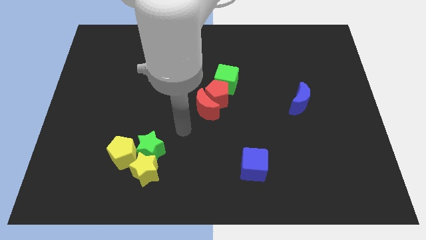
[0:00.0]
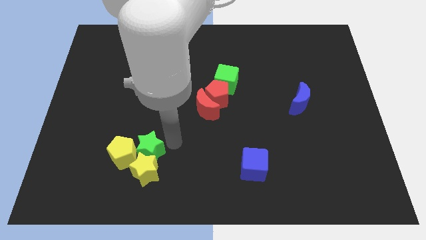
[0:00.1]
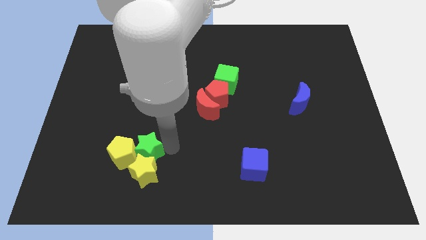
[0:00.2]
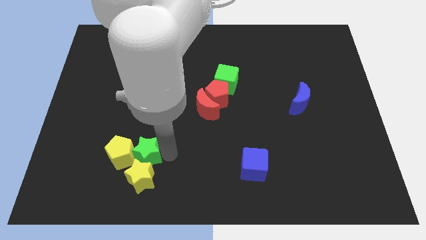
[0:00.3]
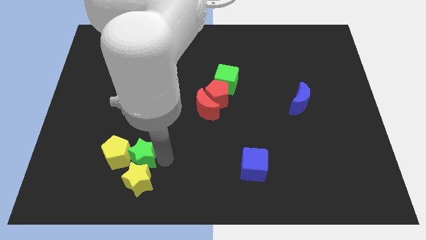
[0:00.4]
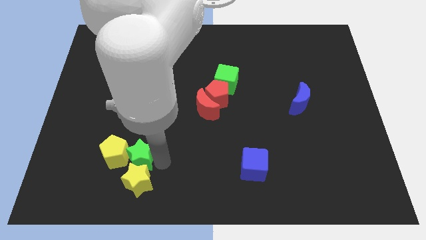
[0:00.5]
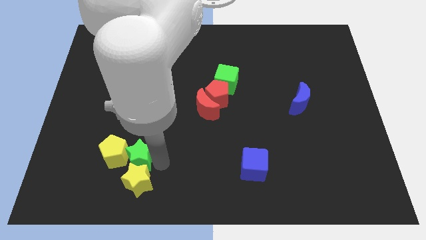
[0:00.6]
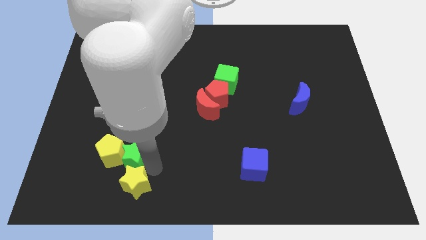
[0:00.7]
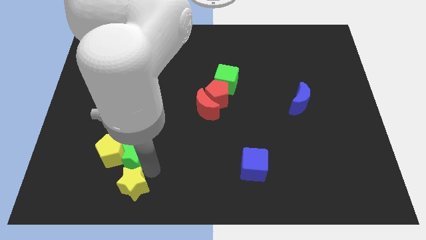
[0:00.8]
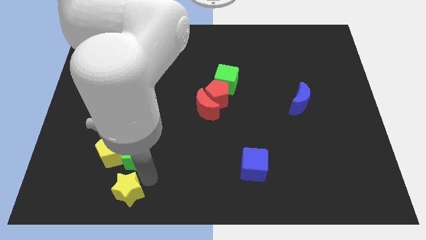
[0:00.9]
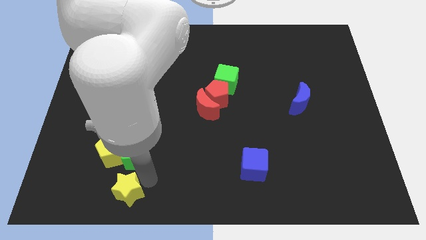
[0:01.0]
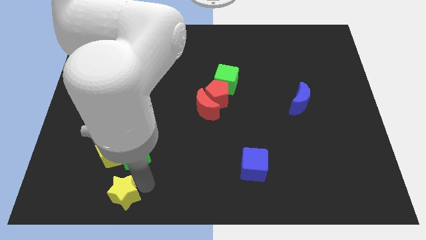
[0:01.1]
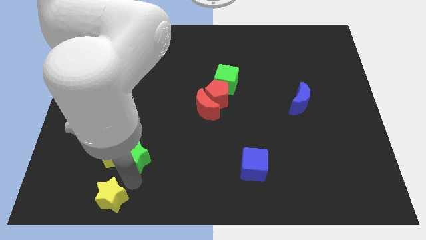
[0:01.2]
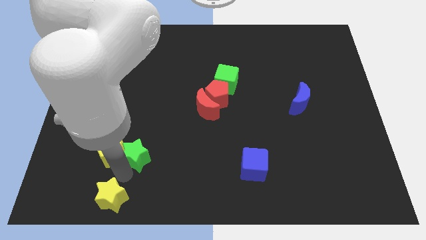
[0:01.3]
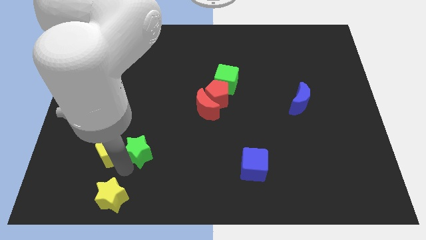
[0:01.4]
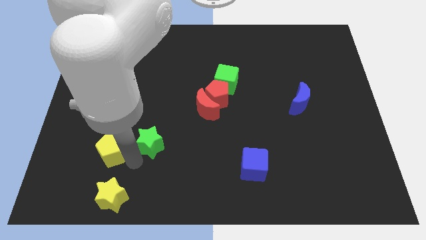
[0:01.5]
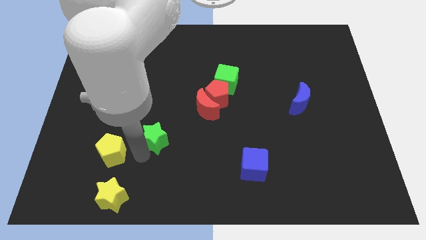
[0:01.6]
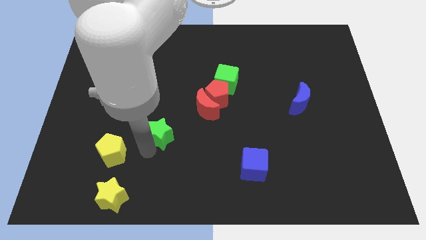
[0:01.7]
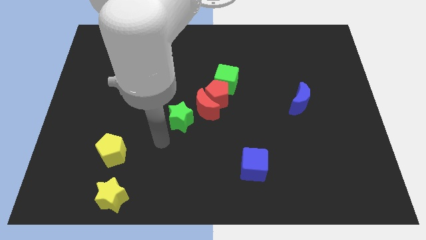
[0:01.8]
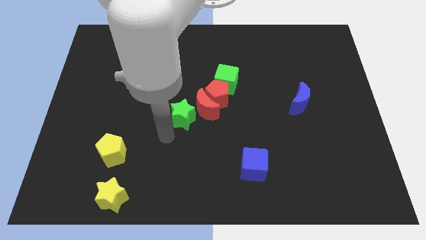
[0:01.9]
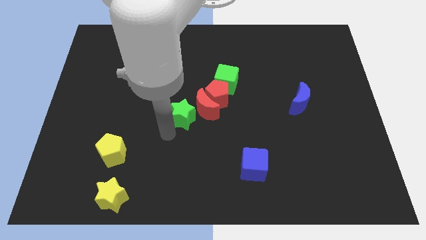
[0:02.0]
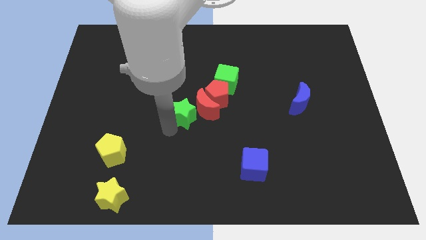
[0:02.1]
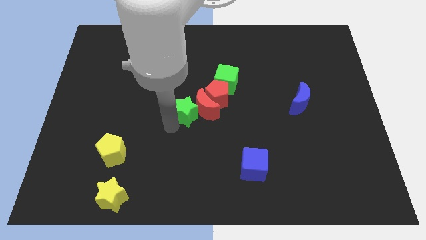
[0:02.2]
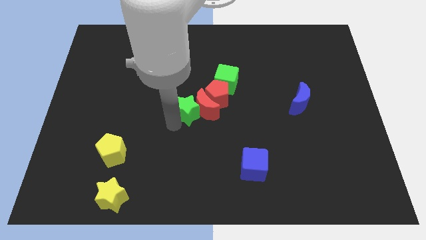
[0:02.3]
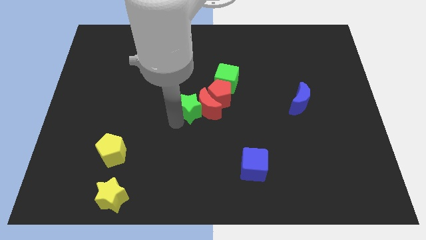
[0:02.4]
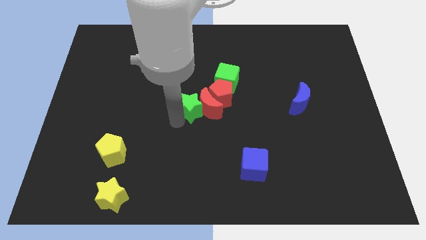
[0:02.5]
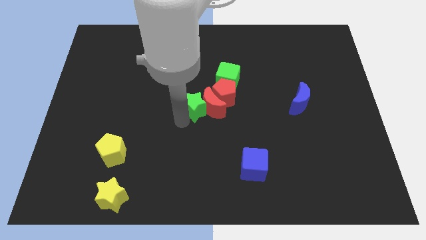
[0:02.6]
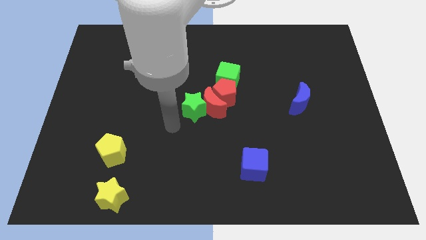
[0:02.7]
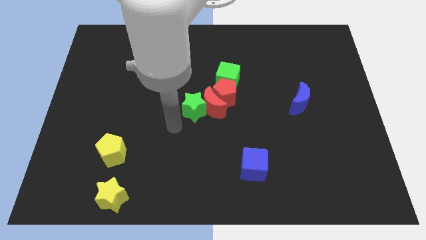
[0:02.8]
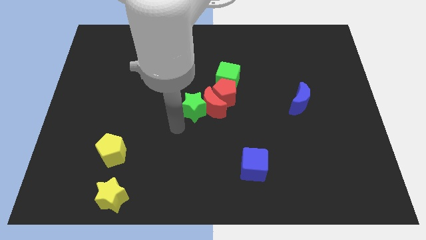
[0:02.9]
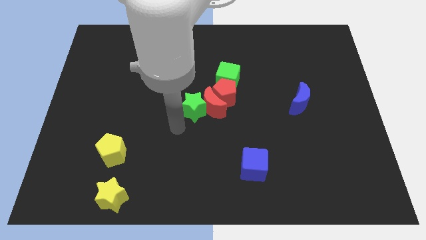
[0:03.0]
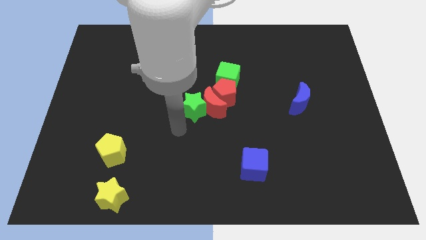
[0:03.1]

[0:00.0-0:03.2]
push the green star into the red crescent

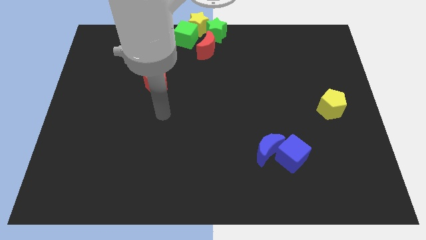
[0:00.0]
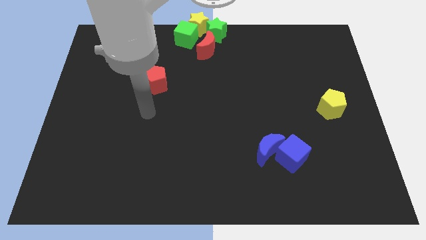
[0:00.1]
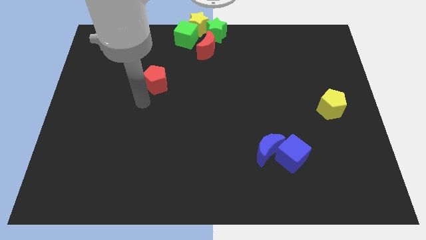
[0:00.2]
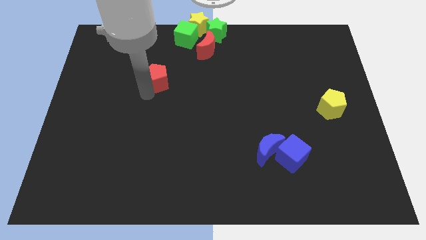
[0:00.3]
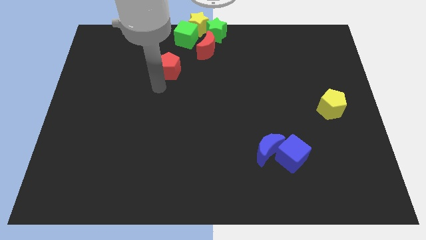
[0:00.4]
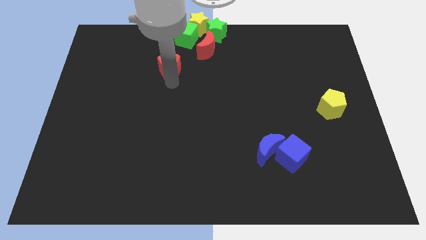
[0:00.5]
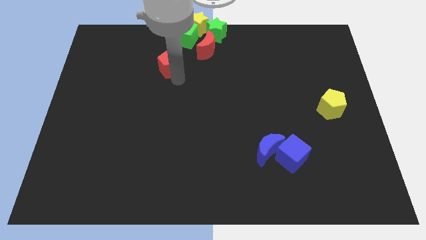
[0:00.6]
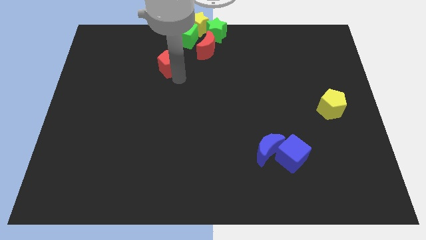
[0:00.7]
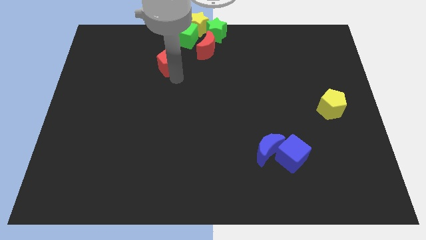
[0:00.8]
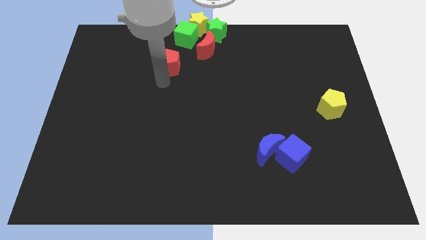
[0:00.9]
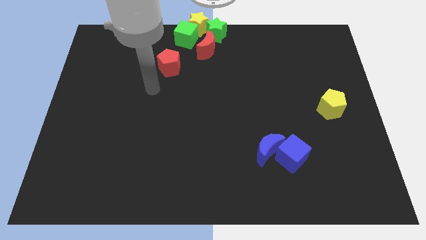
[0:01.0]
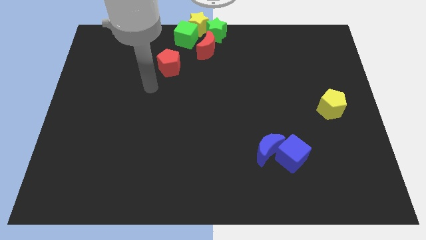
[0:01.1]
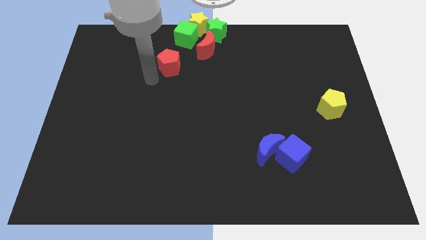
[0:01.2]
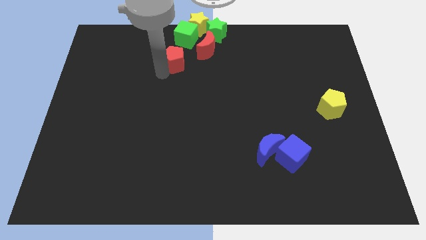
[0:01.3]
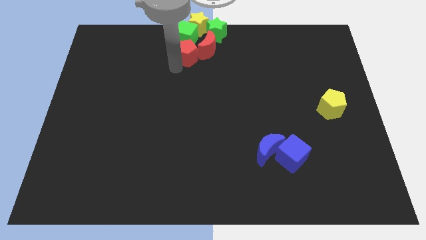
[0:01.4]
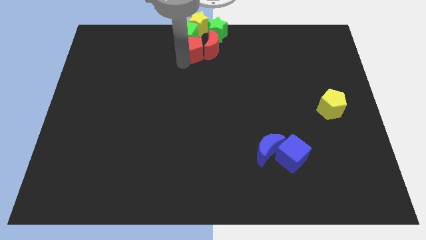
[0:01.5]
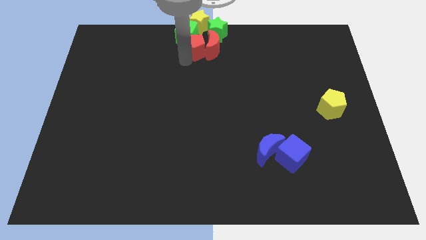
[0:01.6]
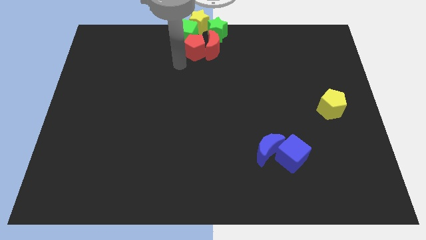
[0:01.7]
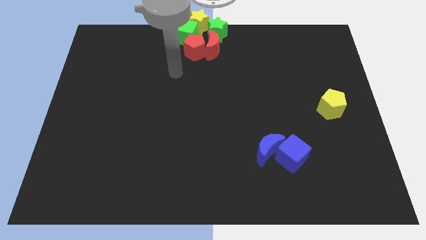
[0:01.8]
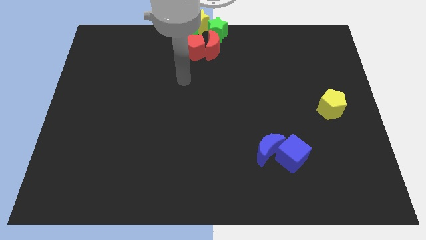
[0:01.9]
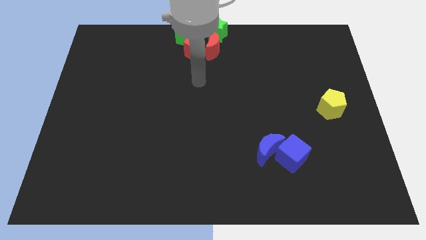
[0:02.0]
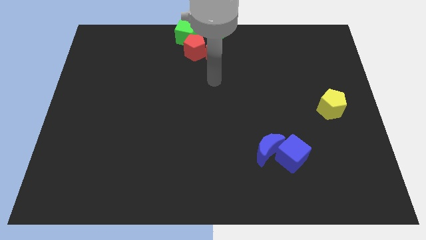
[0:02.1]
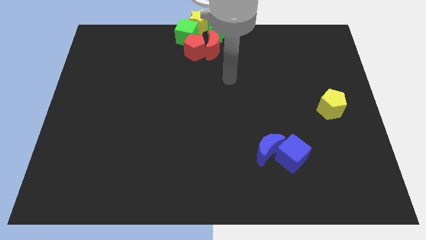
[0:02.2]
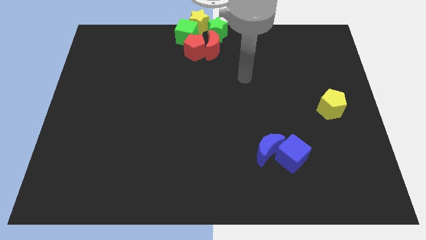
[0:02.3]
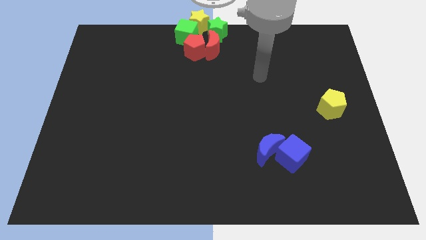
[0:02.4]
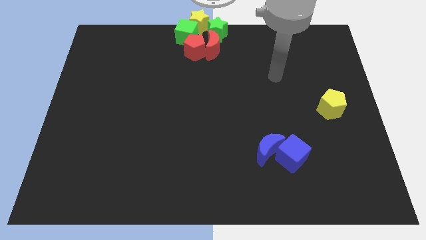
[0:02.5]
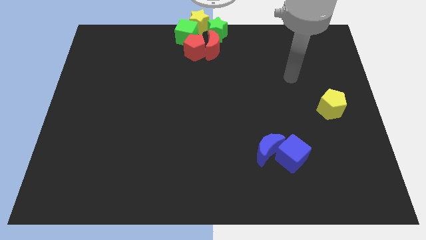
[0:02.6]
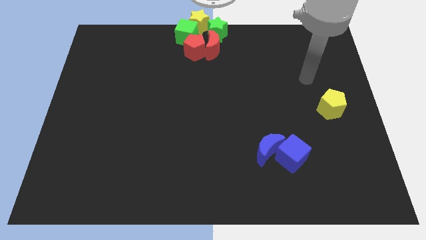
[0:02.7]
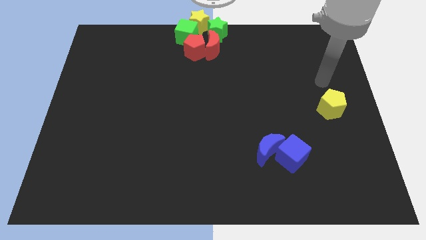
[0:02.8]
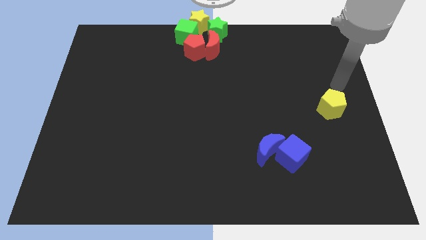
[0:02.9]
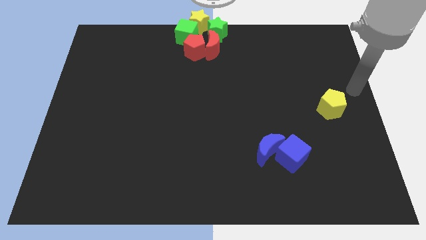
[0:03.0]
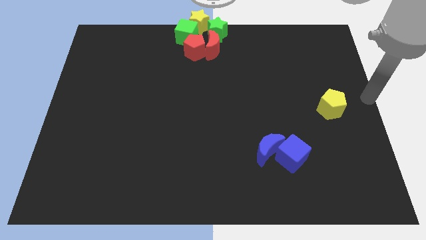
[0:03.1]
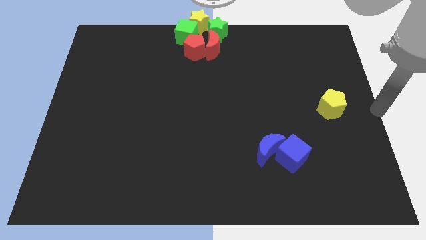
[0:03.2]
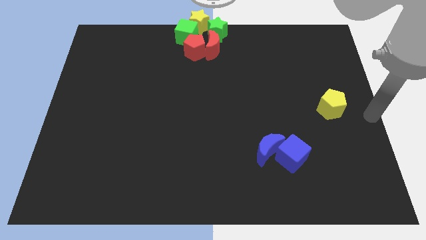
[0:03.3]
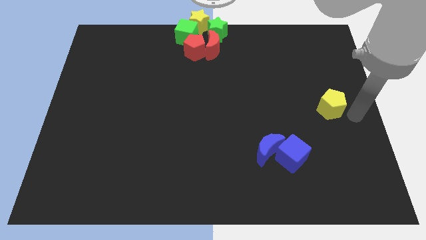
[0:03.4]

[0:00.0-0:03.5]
place the red pentagon at the bottom of the green cube

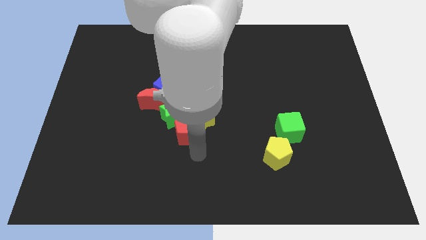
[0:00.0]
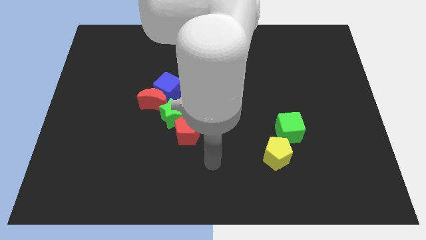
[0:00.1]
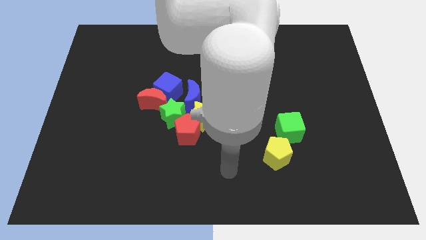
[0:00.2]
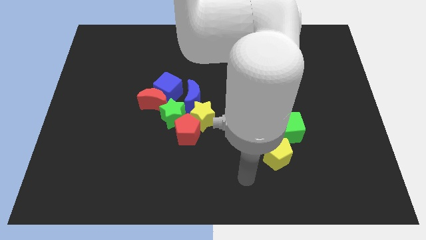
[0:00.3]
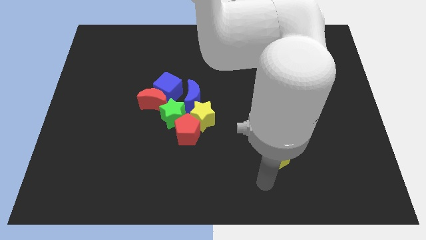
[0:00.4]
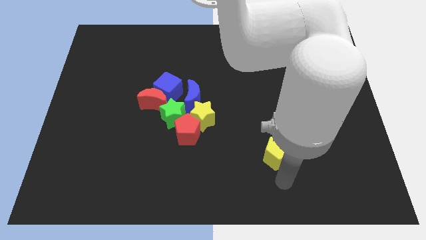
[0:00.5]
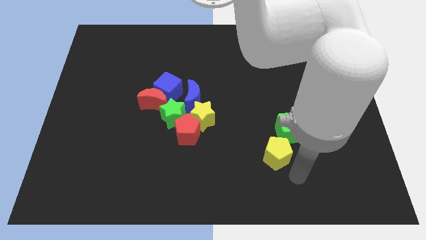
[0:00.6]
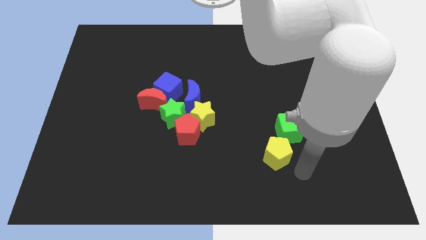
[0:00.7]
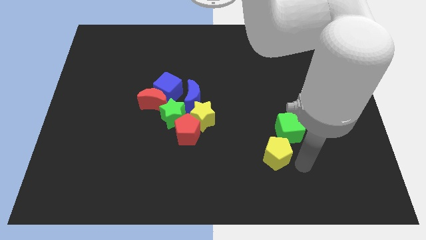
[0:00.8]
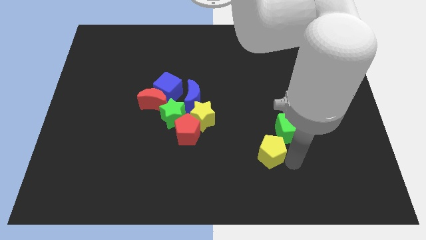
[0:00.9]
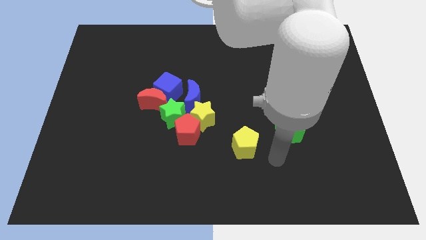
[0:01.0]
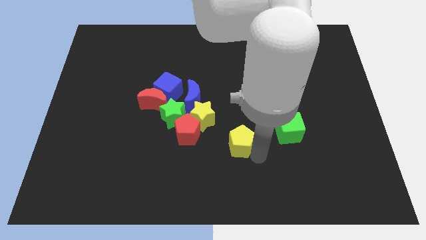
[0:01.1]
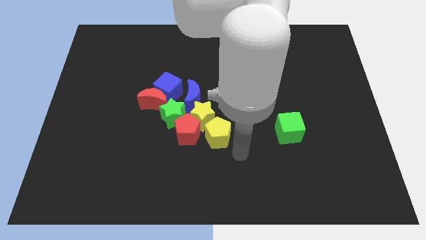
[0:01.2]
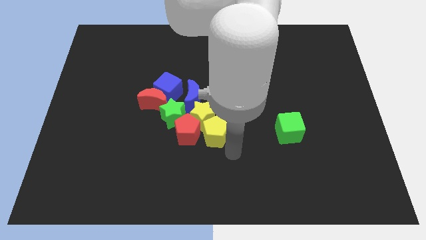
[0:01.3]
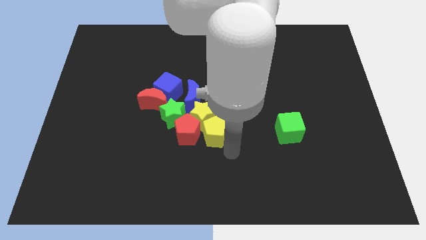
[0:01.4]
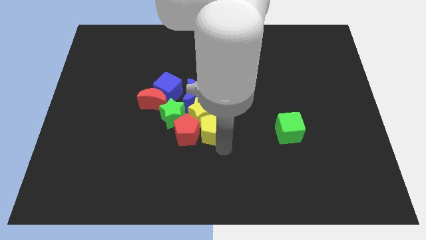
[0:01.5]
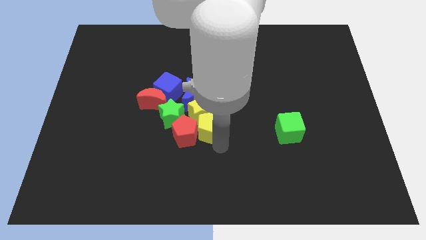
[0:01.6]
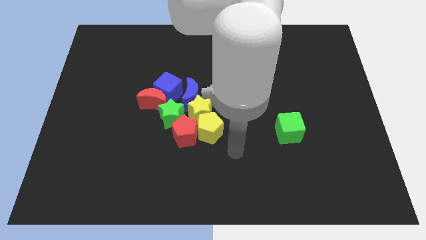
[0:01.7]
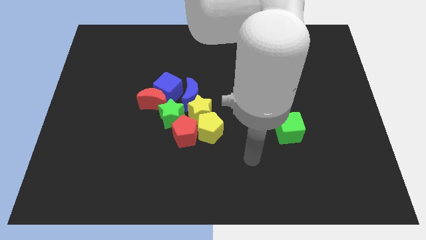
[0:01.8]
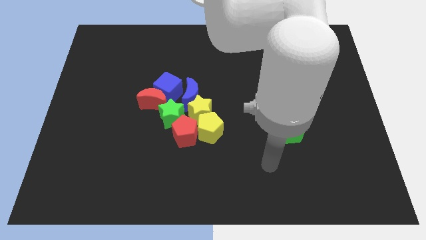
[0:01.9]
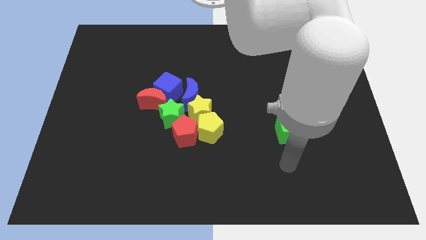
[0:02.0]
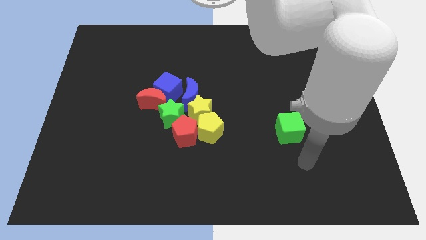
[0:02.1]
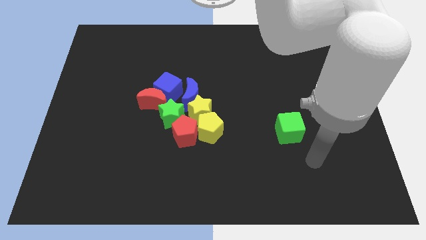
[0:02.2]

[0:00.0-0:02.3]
move the yellow pentagon into the yellow star
